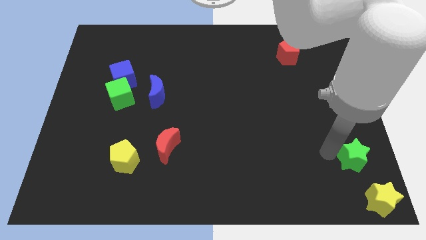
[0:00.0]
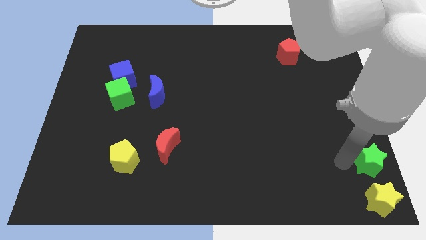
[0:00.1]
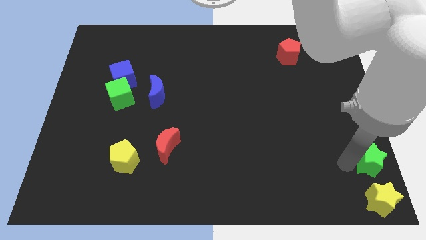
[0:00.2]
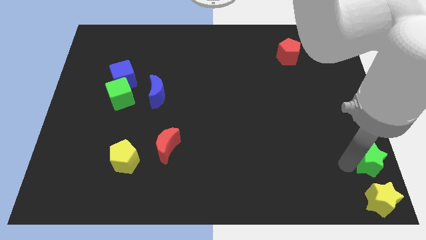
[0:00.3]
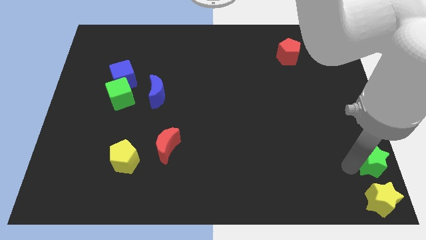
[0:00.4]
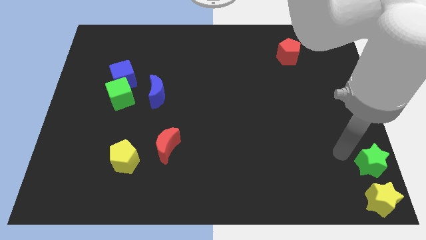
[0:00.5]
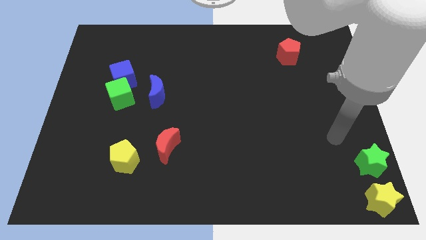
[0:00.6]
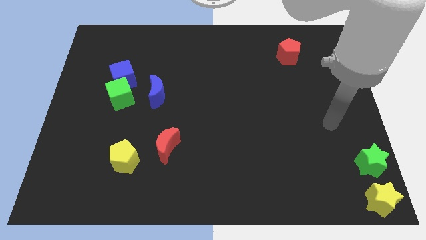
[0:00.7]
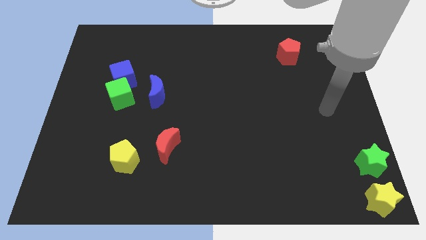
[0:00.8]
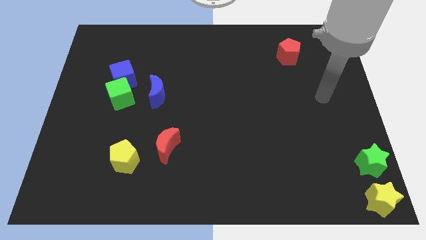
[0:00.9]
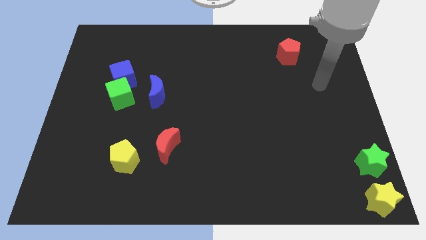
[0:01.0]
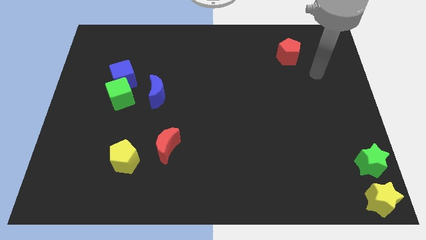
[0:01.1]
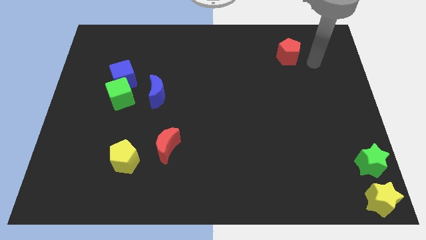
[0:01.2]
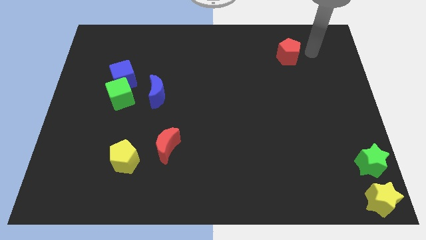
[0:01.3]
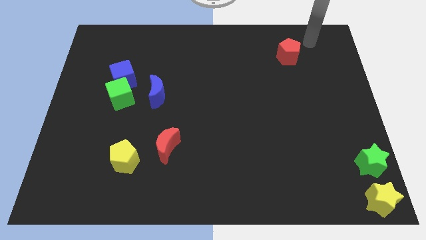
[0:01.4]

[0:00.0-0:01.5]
place the green star on the top side of the yellow star

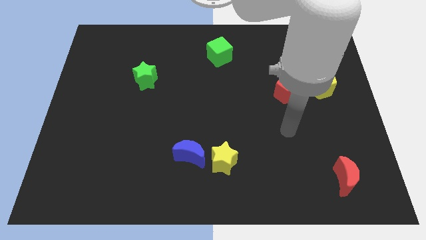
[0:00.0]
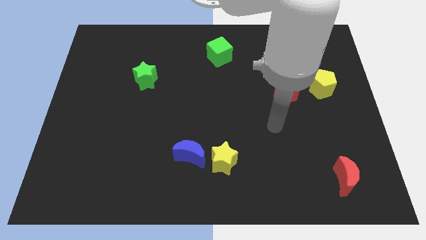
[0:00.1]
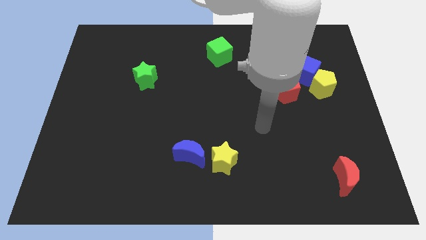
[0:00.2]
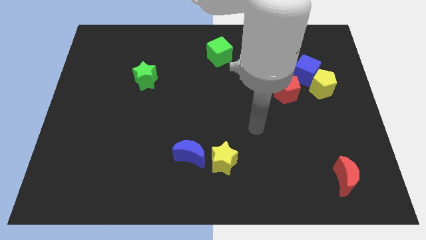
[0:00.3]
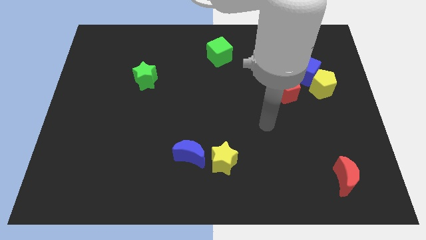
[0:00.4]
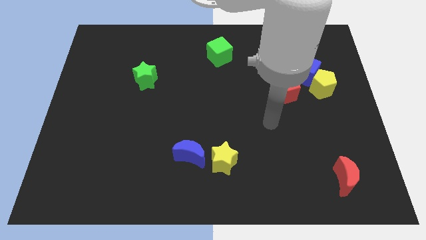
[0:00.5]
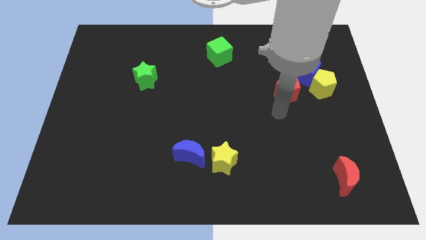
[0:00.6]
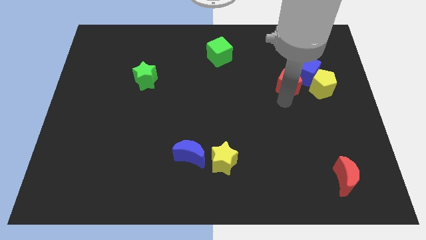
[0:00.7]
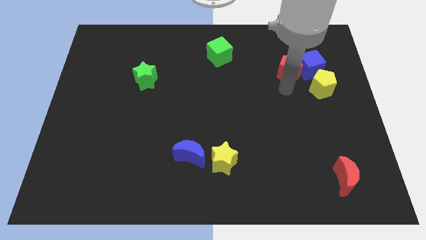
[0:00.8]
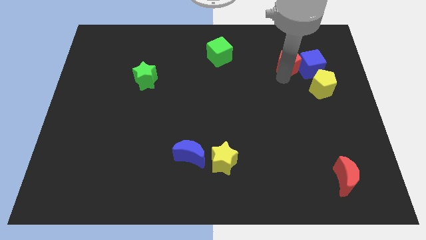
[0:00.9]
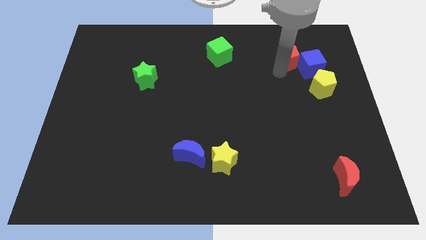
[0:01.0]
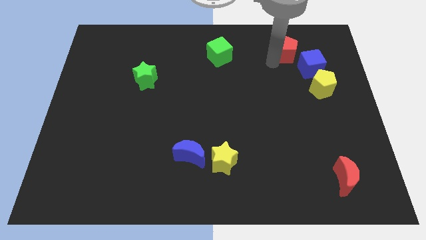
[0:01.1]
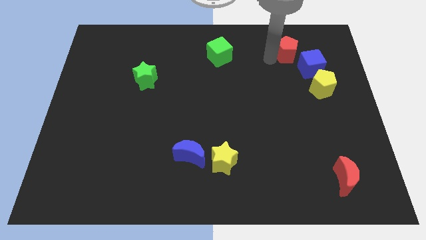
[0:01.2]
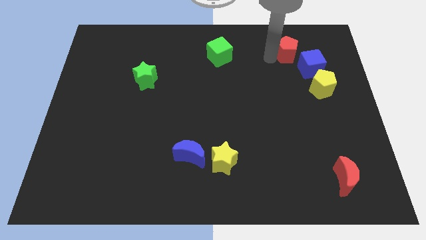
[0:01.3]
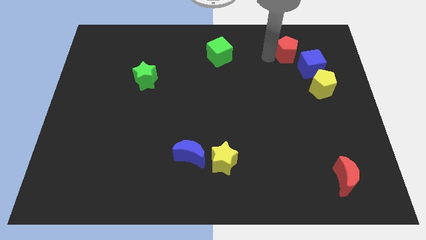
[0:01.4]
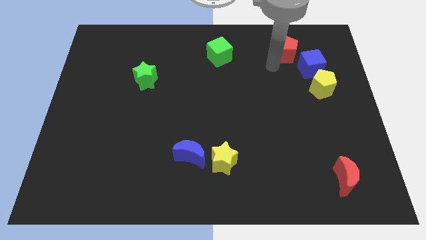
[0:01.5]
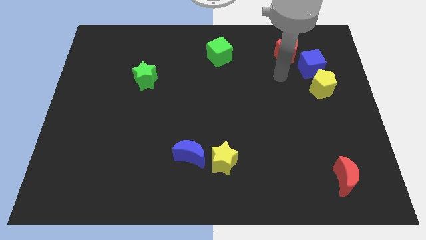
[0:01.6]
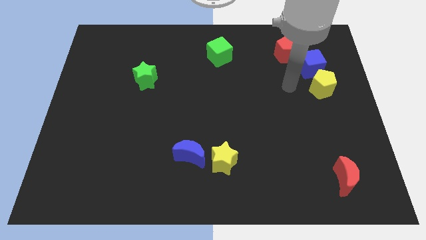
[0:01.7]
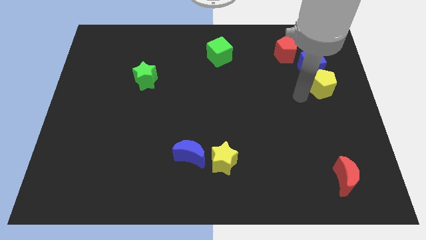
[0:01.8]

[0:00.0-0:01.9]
move the red pentagon parallel to green cube

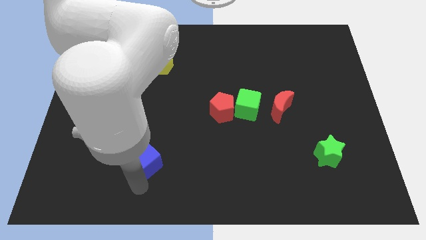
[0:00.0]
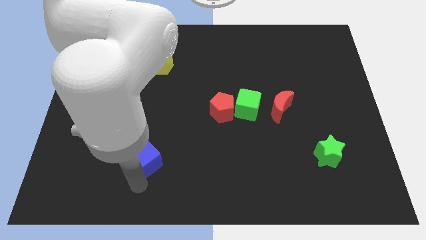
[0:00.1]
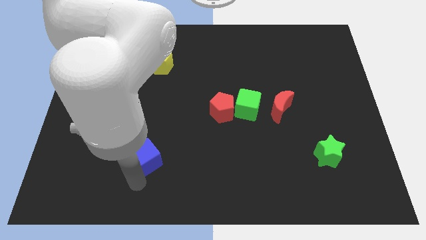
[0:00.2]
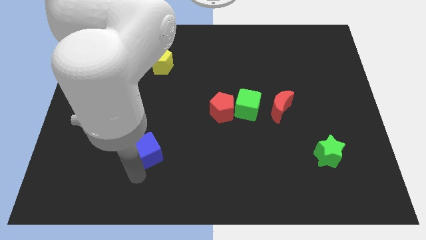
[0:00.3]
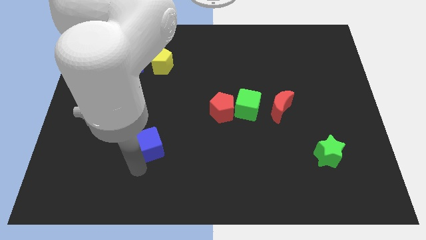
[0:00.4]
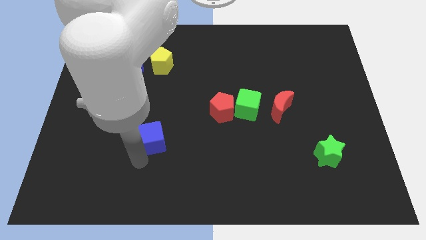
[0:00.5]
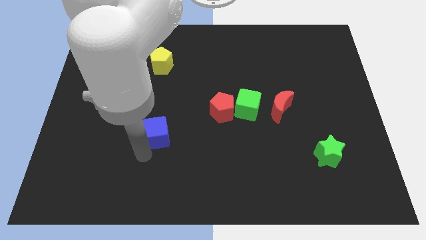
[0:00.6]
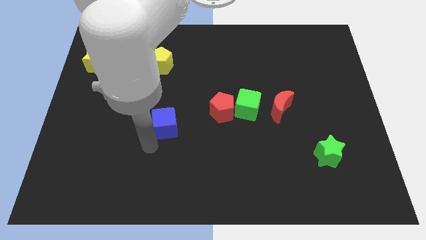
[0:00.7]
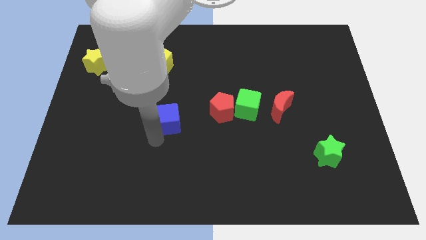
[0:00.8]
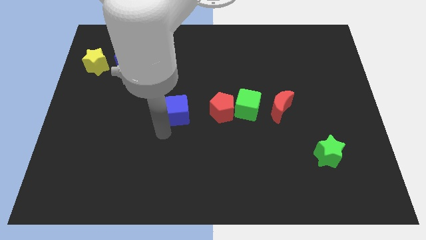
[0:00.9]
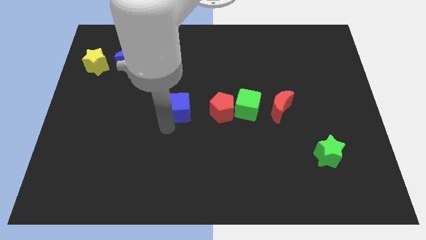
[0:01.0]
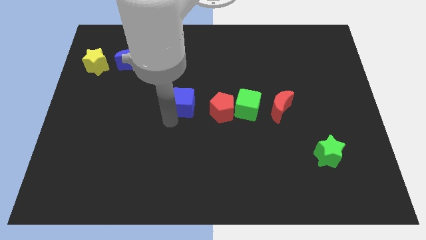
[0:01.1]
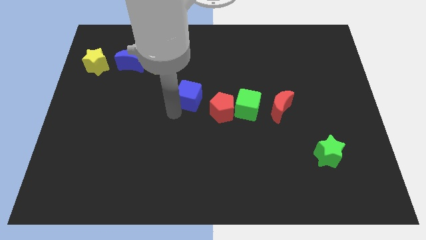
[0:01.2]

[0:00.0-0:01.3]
place blue cube parallel to red pentagon

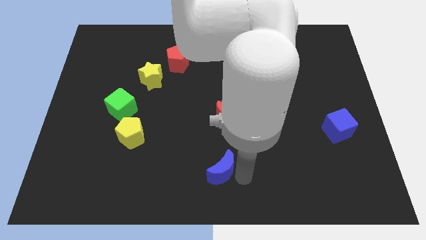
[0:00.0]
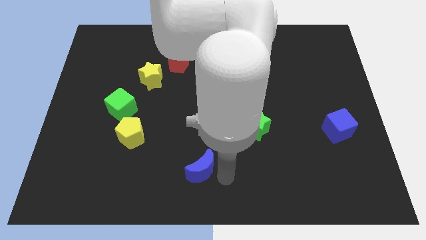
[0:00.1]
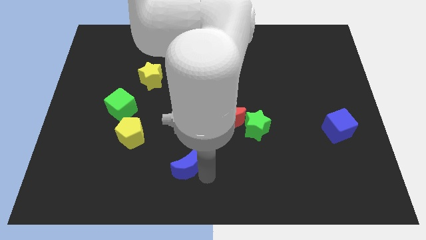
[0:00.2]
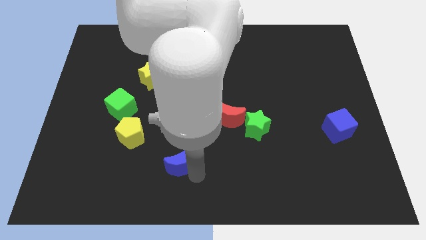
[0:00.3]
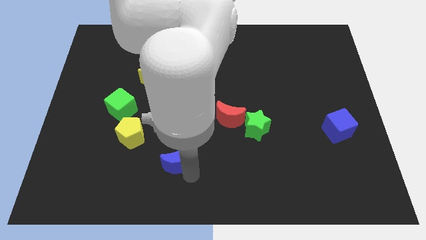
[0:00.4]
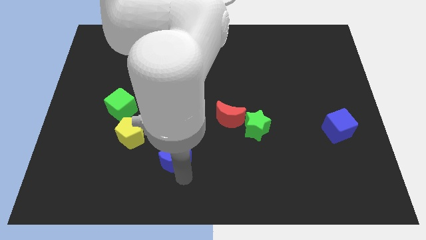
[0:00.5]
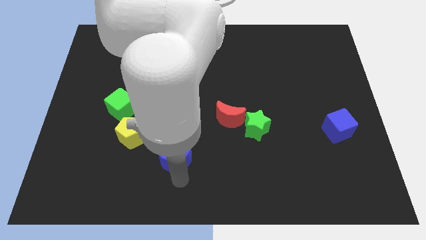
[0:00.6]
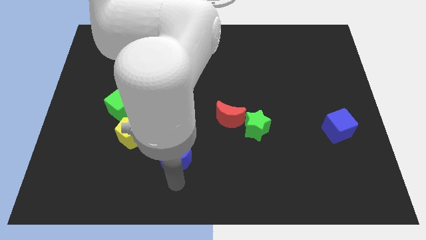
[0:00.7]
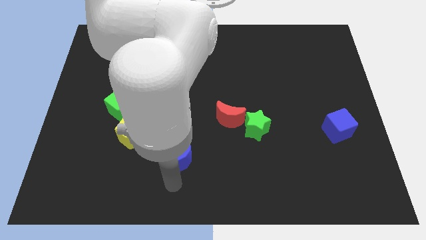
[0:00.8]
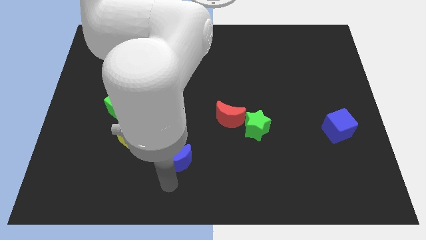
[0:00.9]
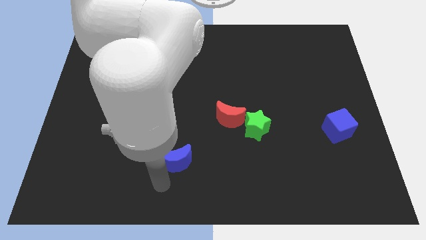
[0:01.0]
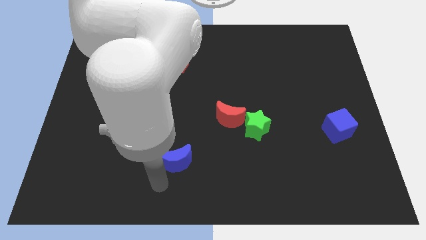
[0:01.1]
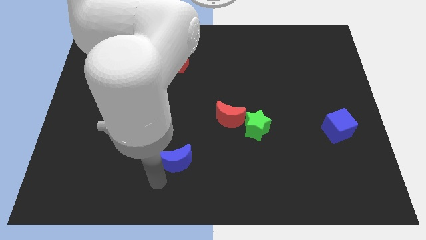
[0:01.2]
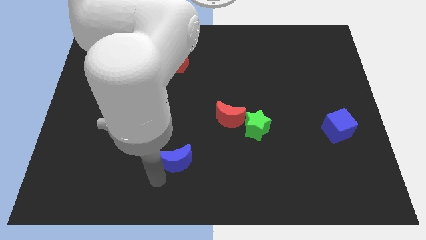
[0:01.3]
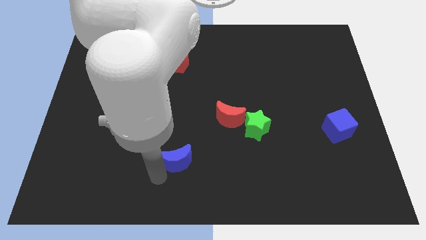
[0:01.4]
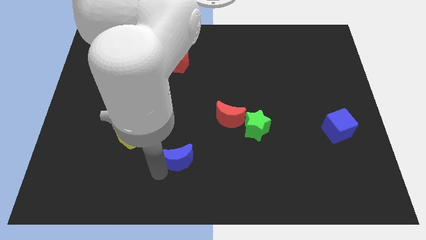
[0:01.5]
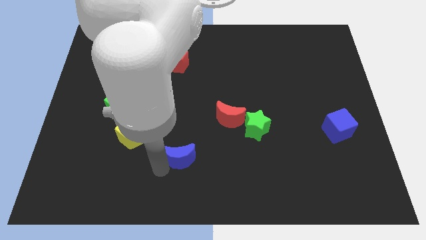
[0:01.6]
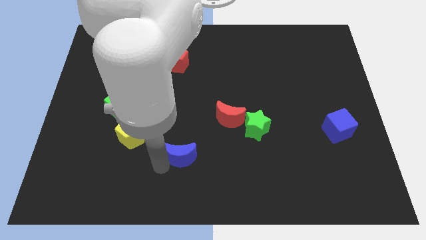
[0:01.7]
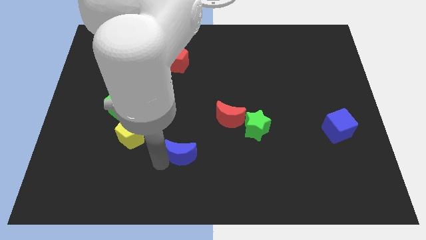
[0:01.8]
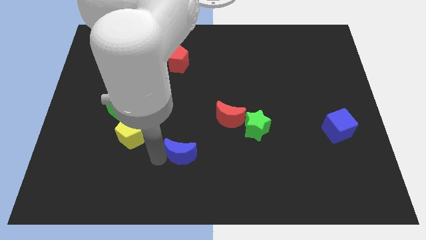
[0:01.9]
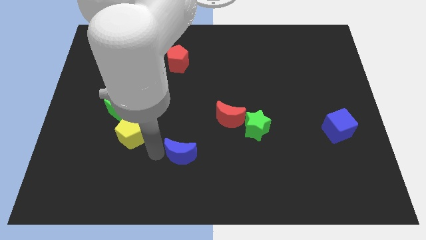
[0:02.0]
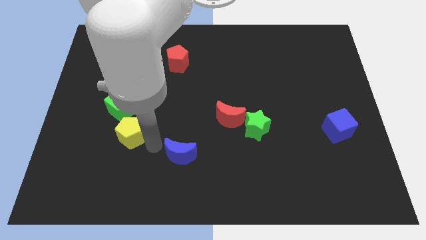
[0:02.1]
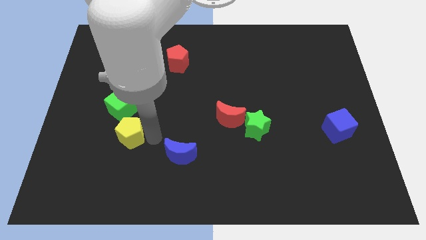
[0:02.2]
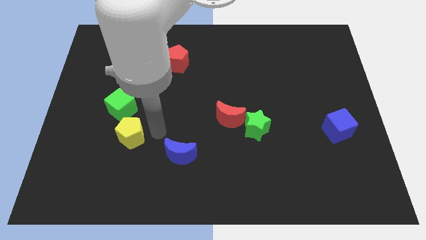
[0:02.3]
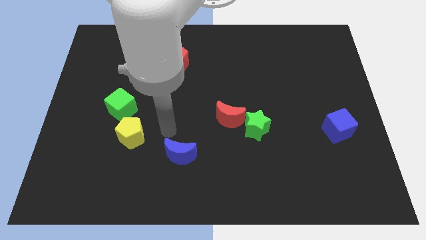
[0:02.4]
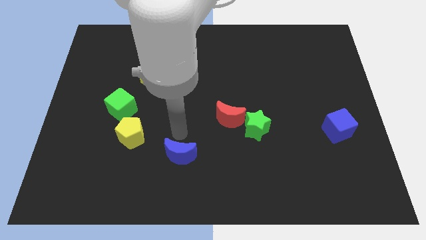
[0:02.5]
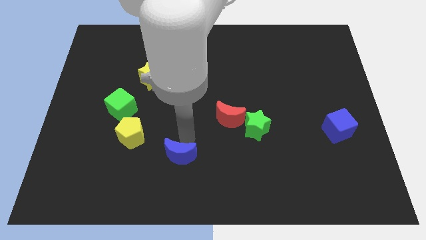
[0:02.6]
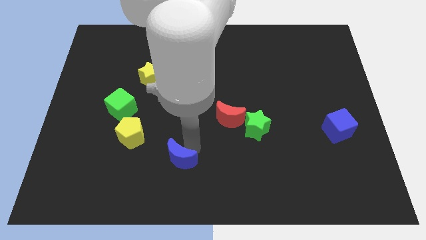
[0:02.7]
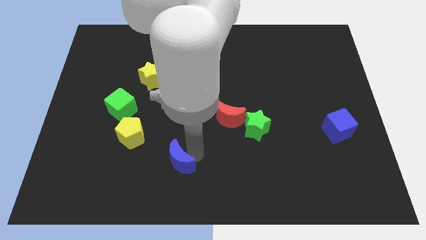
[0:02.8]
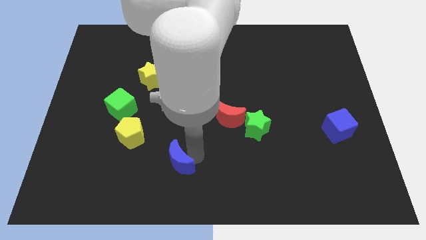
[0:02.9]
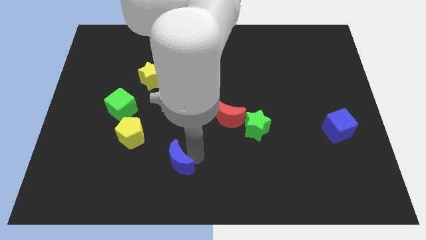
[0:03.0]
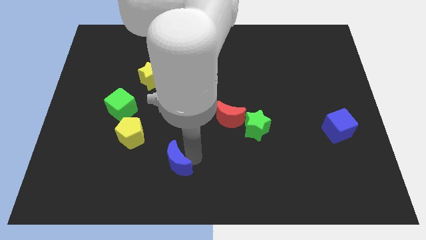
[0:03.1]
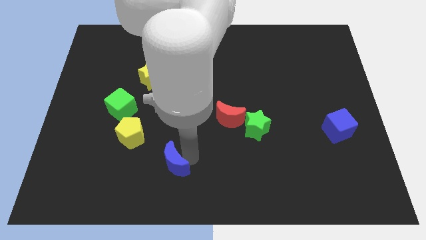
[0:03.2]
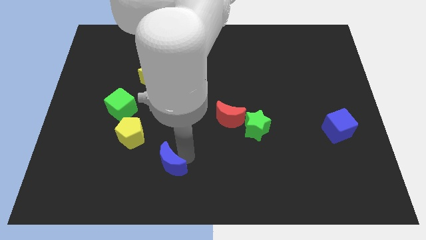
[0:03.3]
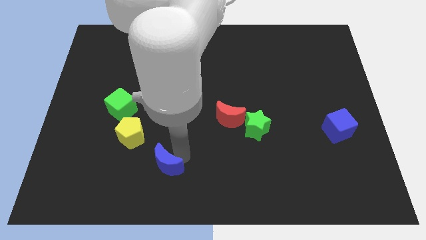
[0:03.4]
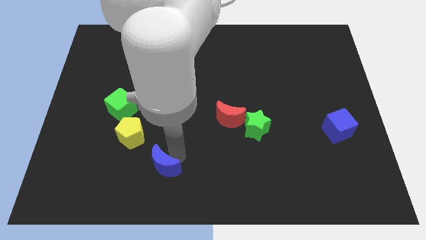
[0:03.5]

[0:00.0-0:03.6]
push blue crescent below yellow star

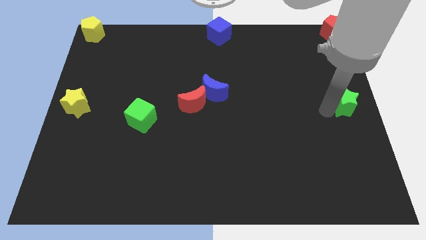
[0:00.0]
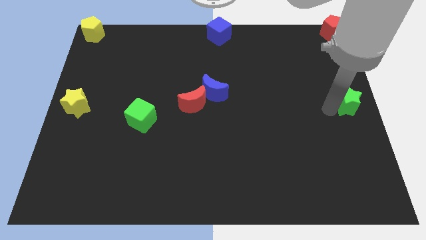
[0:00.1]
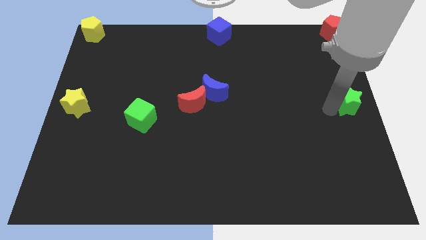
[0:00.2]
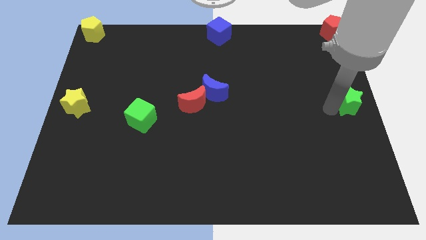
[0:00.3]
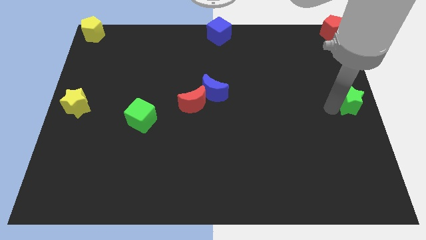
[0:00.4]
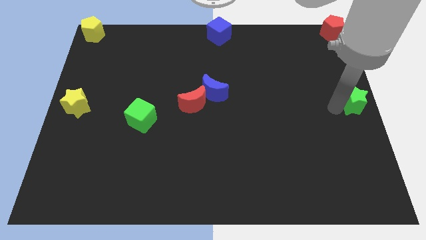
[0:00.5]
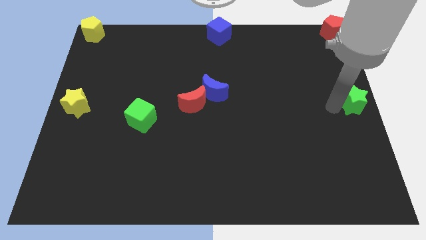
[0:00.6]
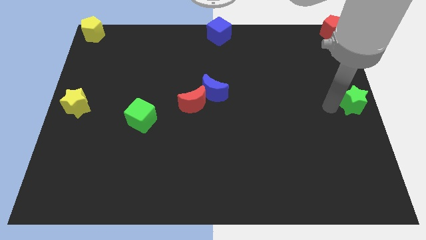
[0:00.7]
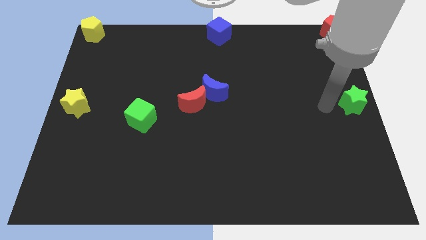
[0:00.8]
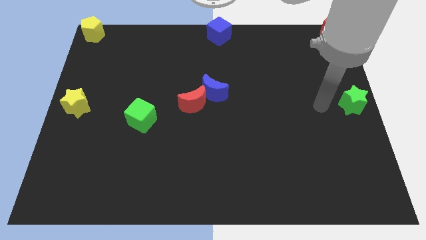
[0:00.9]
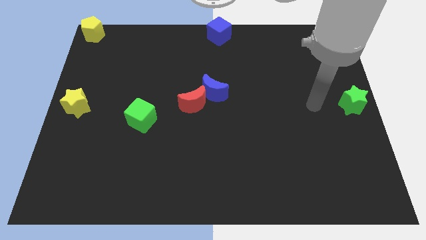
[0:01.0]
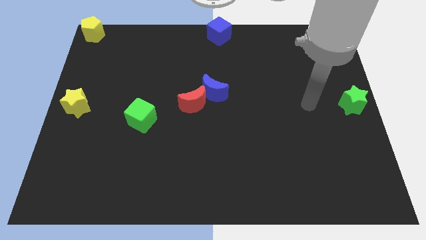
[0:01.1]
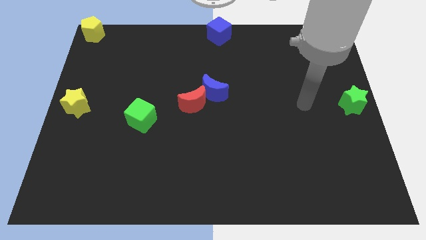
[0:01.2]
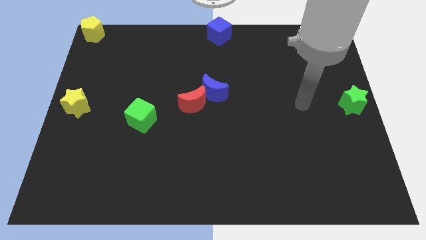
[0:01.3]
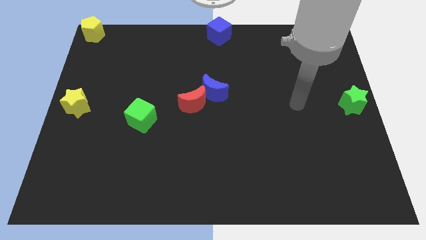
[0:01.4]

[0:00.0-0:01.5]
adjust the green star vertically straight to the red pentagon at the right center
